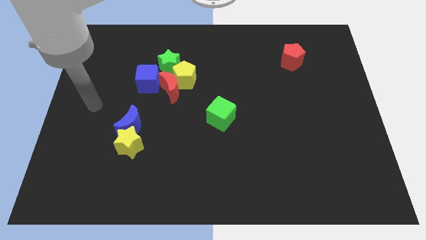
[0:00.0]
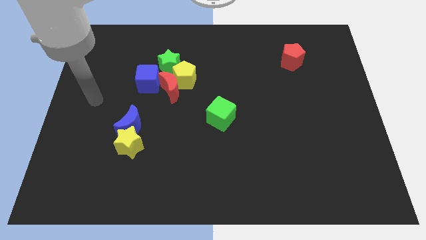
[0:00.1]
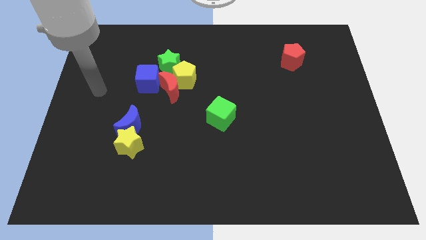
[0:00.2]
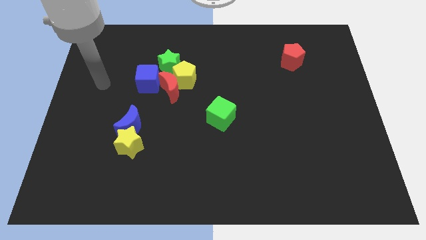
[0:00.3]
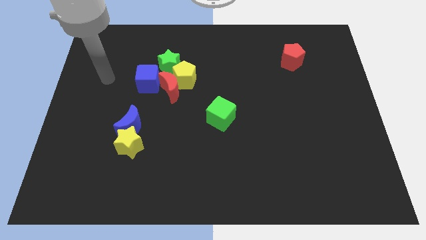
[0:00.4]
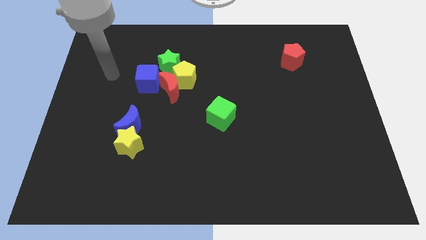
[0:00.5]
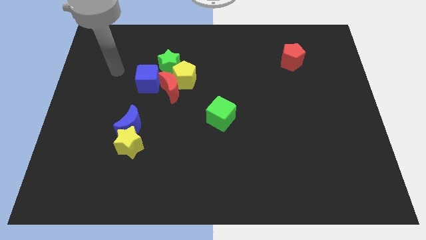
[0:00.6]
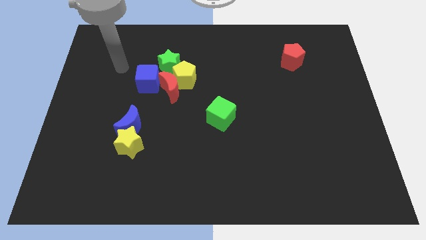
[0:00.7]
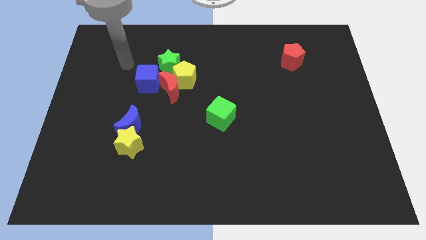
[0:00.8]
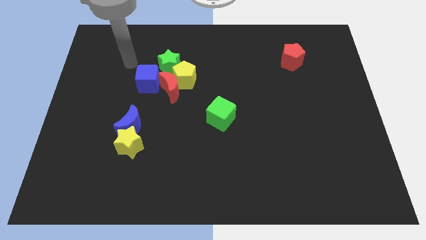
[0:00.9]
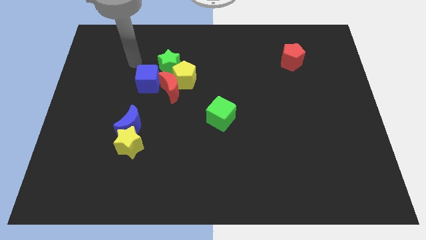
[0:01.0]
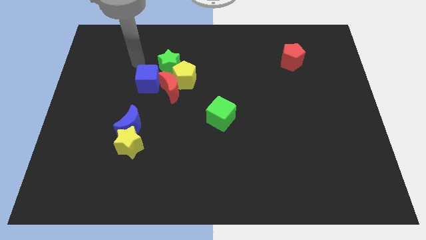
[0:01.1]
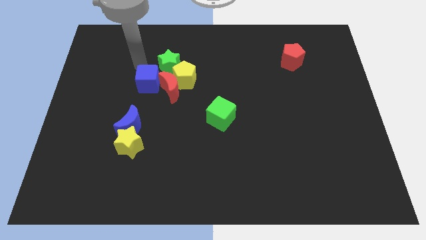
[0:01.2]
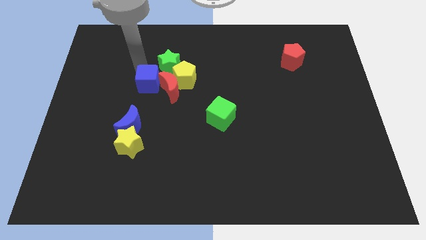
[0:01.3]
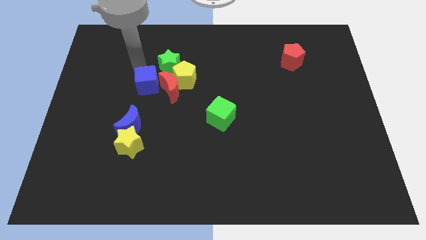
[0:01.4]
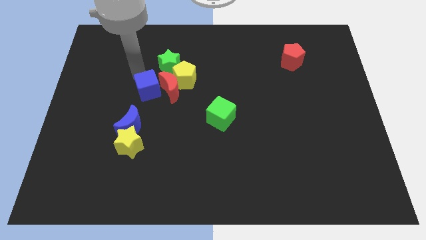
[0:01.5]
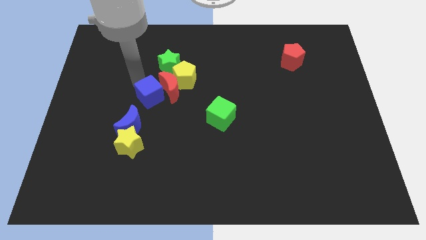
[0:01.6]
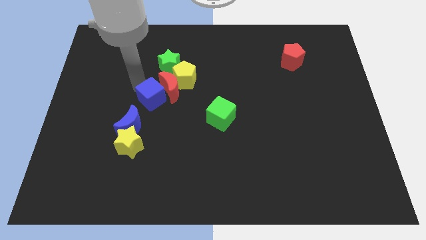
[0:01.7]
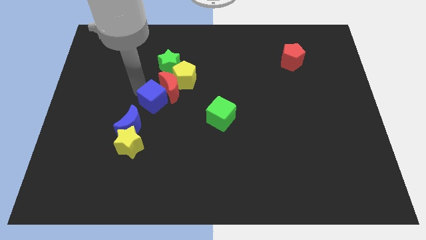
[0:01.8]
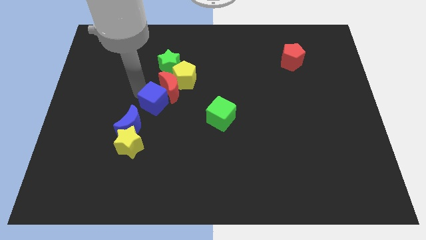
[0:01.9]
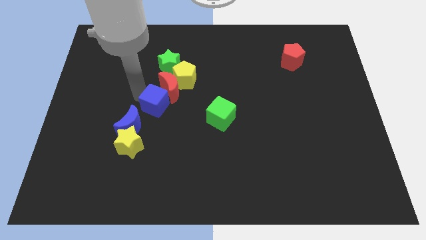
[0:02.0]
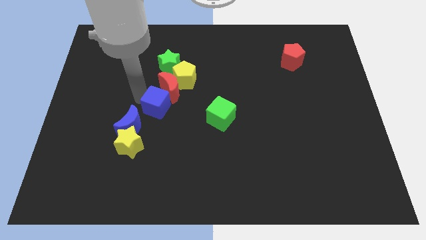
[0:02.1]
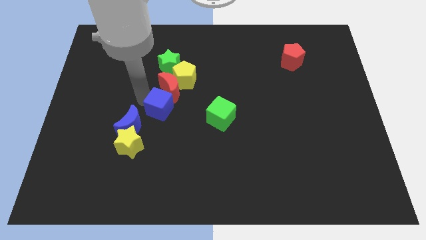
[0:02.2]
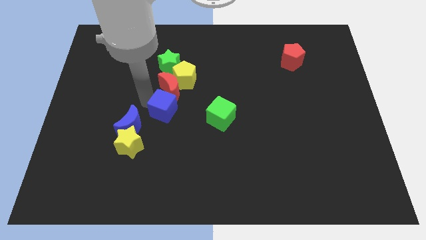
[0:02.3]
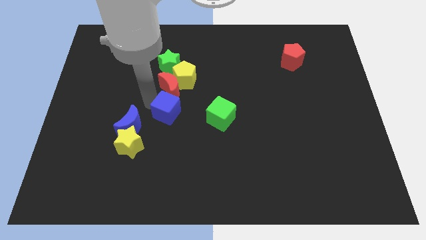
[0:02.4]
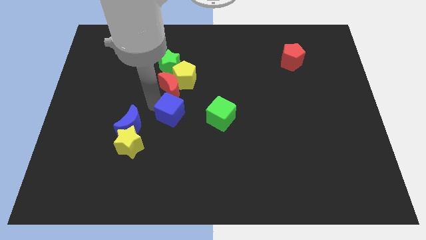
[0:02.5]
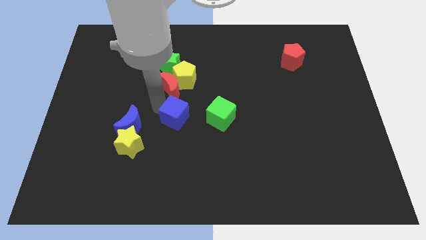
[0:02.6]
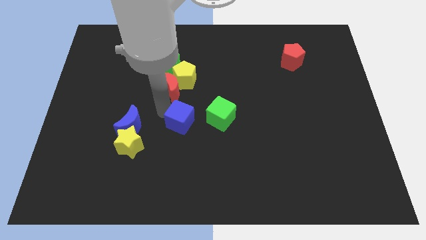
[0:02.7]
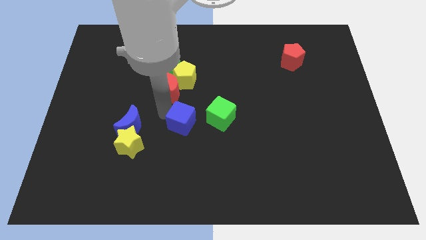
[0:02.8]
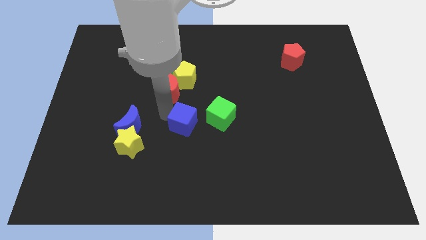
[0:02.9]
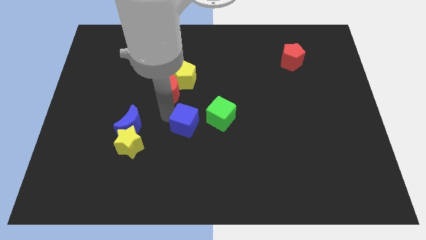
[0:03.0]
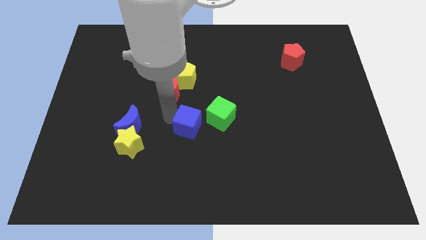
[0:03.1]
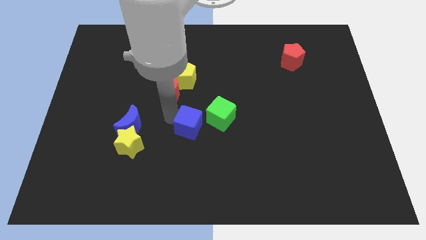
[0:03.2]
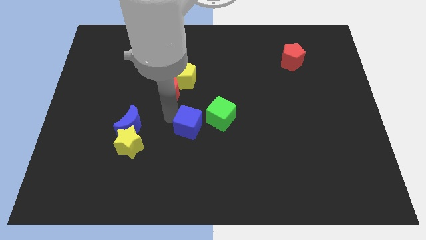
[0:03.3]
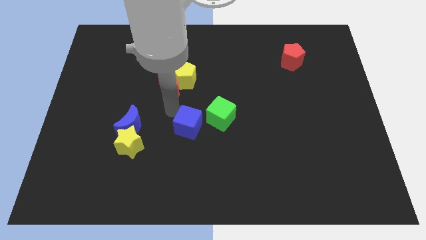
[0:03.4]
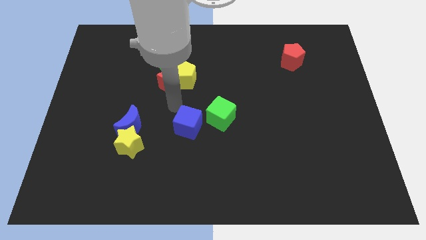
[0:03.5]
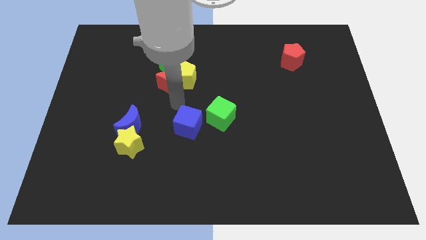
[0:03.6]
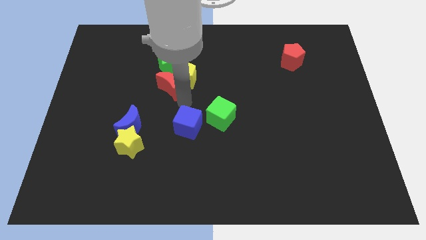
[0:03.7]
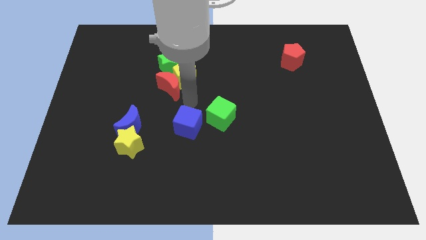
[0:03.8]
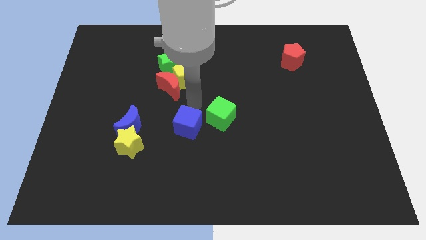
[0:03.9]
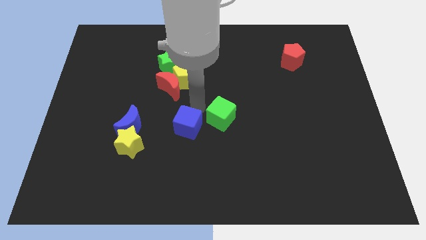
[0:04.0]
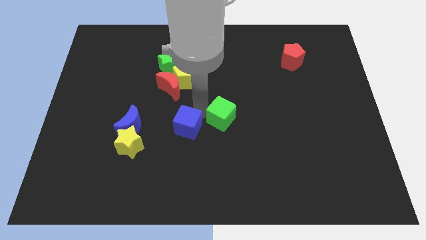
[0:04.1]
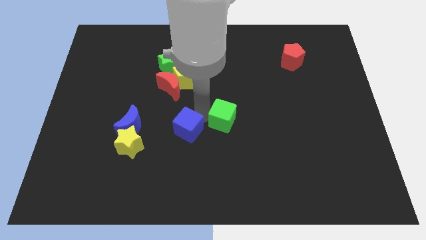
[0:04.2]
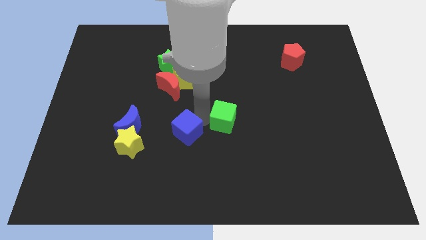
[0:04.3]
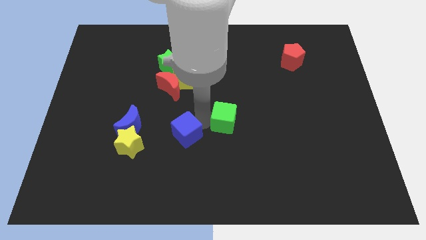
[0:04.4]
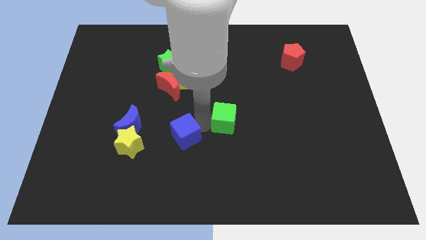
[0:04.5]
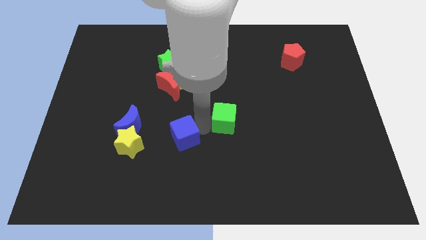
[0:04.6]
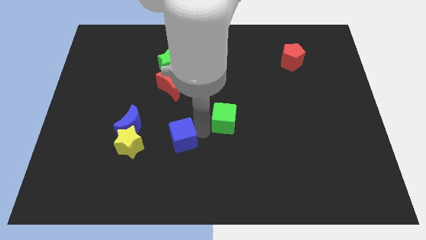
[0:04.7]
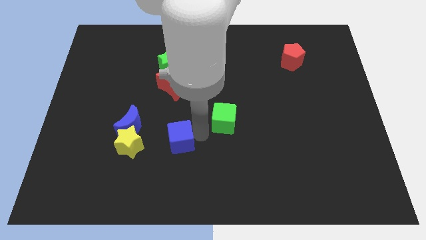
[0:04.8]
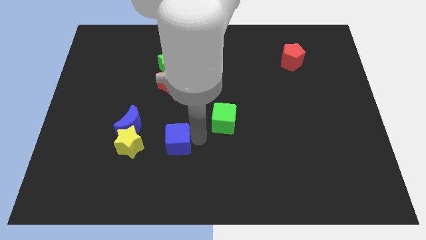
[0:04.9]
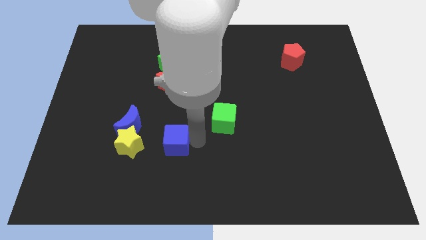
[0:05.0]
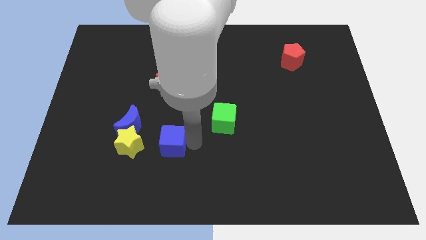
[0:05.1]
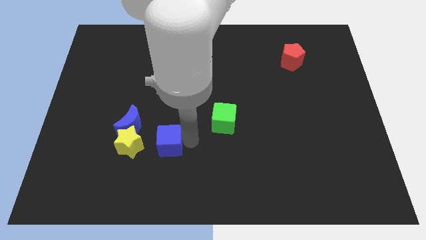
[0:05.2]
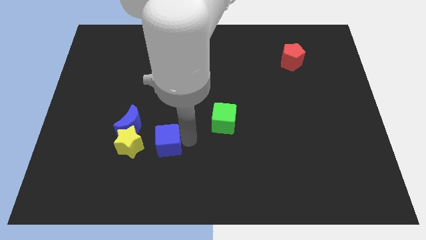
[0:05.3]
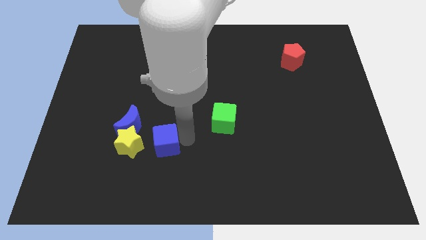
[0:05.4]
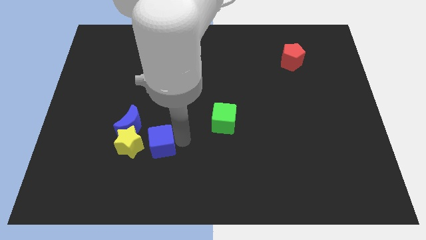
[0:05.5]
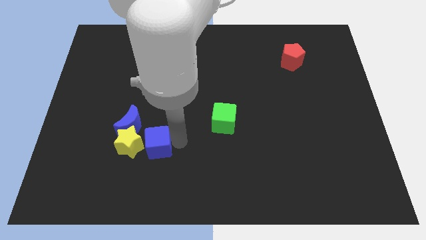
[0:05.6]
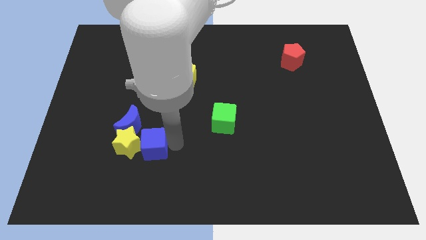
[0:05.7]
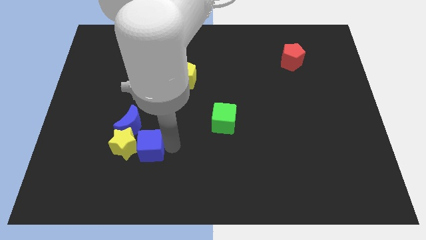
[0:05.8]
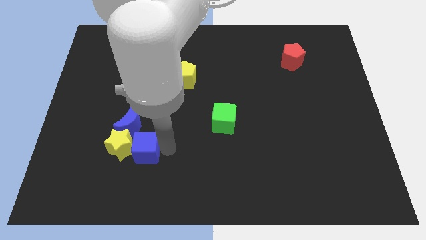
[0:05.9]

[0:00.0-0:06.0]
slide the blue cube close to the yellow star

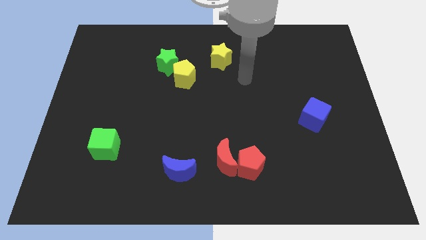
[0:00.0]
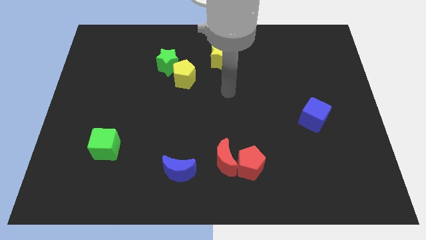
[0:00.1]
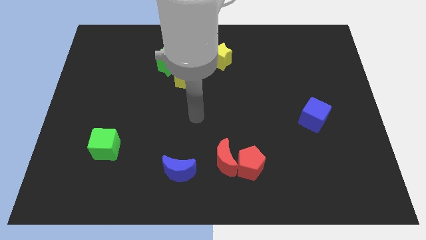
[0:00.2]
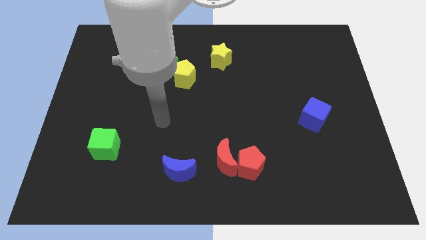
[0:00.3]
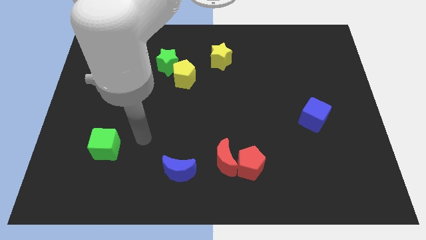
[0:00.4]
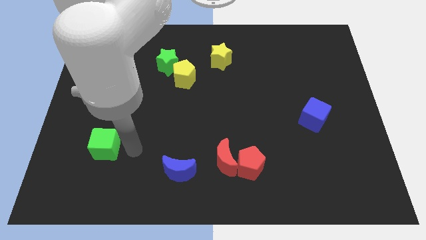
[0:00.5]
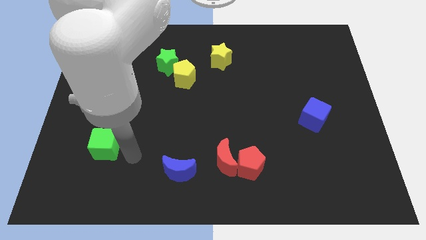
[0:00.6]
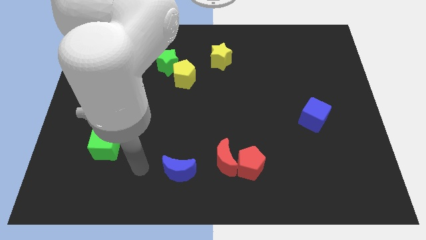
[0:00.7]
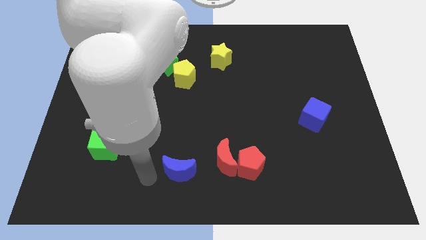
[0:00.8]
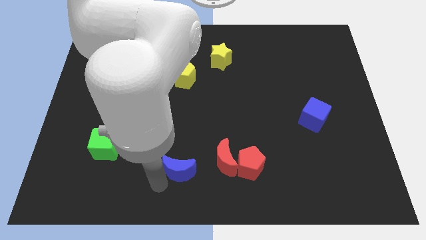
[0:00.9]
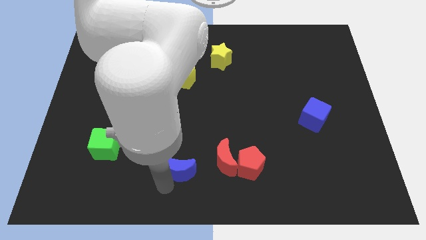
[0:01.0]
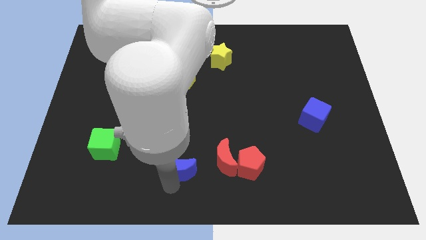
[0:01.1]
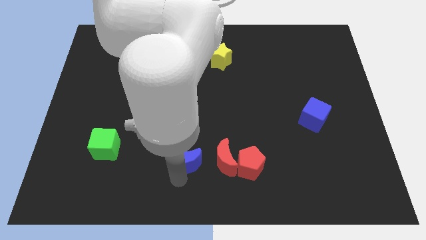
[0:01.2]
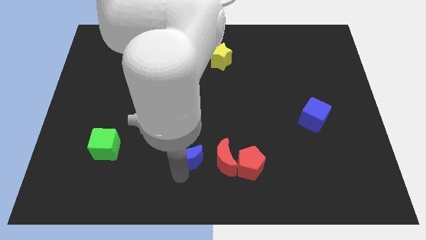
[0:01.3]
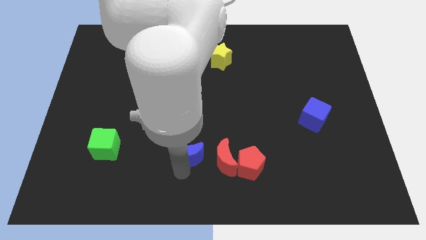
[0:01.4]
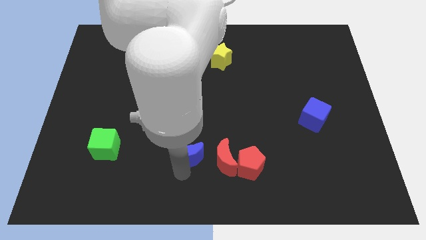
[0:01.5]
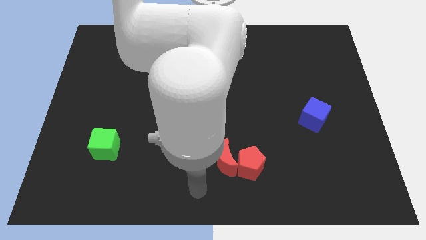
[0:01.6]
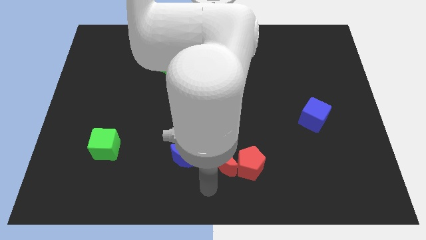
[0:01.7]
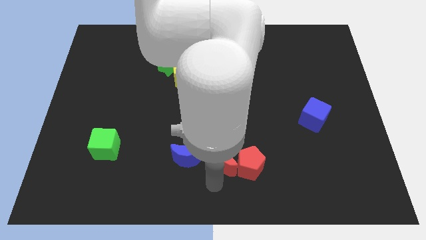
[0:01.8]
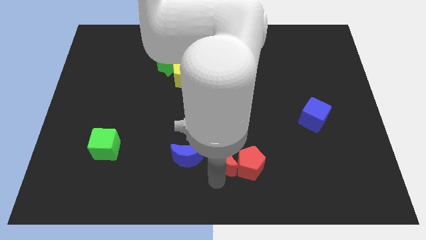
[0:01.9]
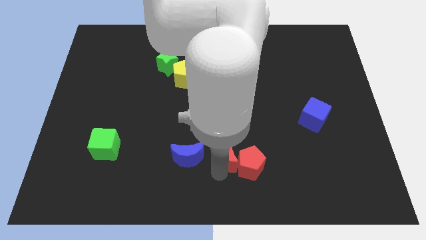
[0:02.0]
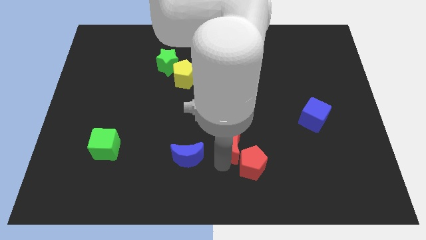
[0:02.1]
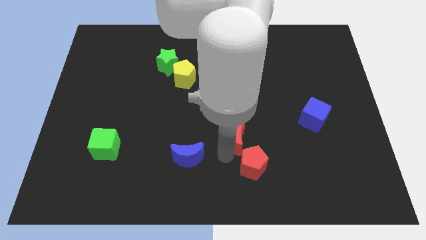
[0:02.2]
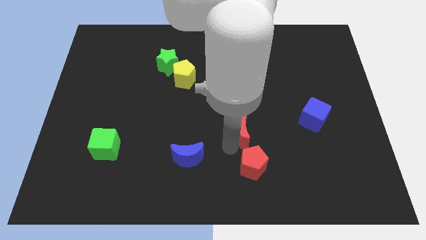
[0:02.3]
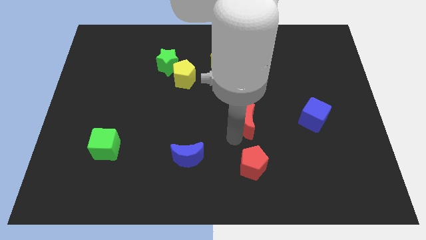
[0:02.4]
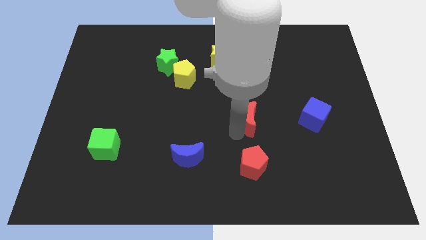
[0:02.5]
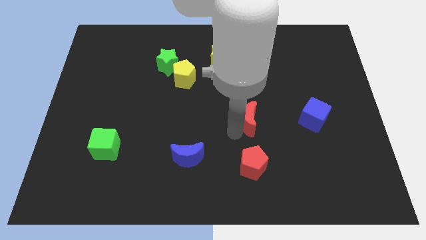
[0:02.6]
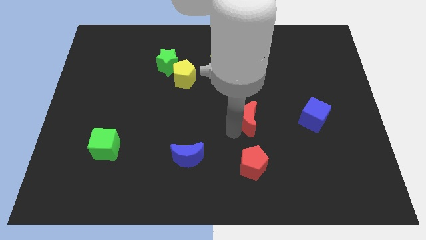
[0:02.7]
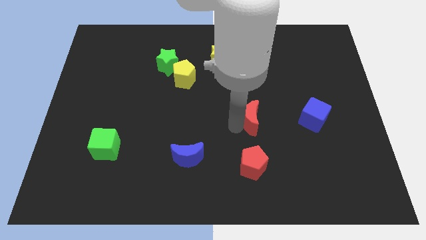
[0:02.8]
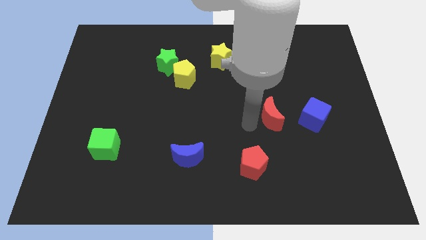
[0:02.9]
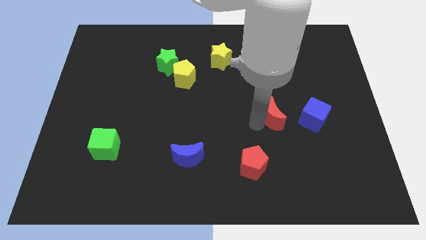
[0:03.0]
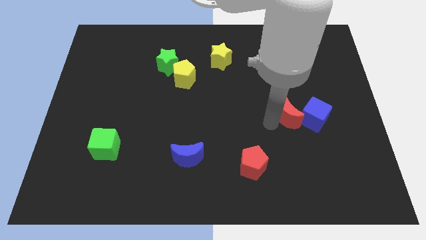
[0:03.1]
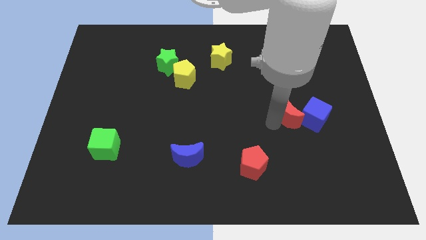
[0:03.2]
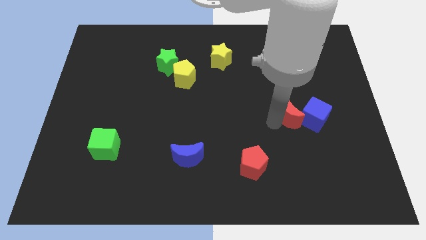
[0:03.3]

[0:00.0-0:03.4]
slide the red moon next to the blue cube
